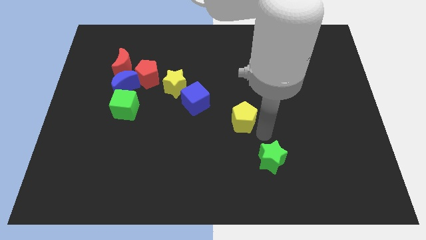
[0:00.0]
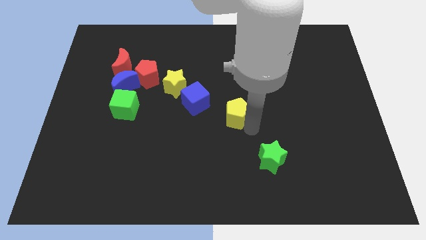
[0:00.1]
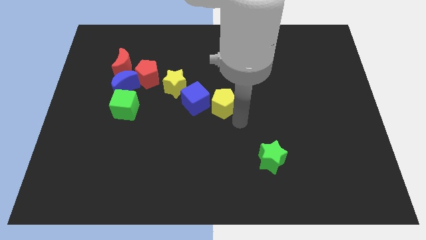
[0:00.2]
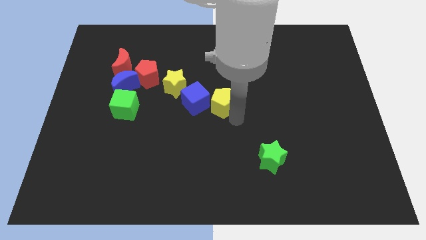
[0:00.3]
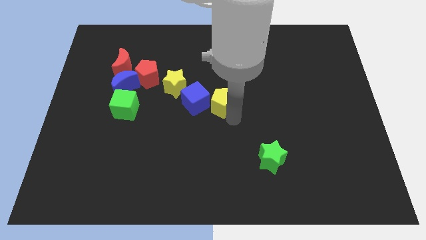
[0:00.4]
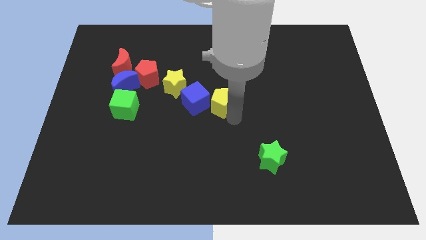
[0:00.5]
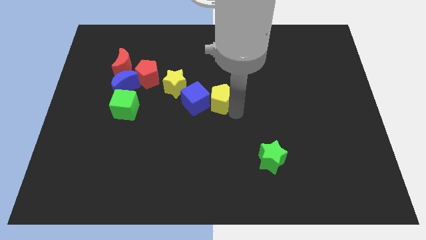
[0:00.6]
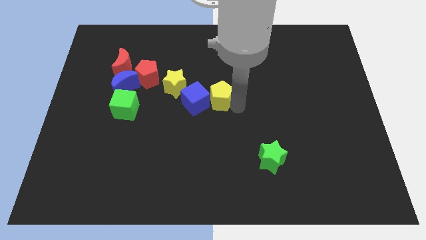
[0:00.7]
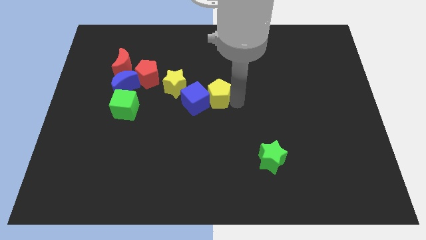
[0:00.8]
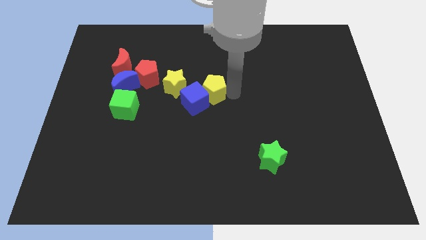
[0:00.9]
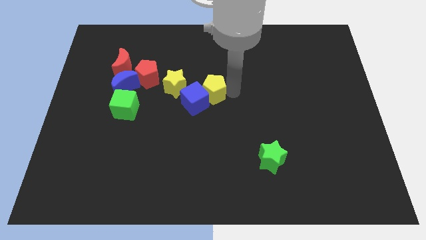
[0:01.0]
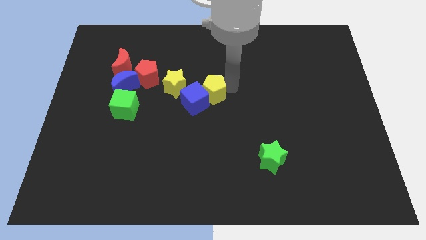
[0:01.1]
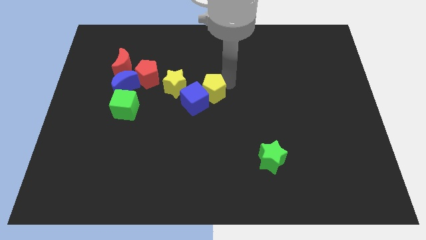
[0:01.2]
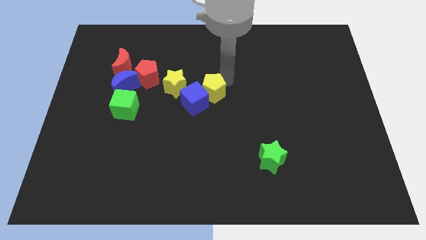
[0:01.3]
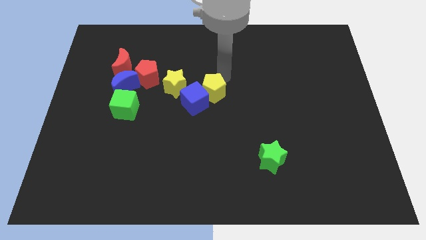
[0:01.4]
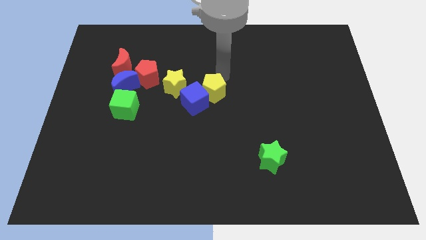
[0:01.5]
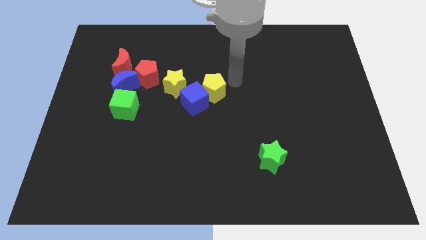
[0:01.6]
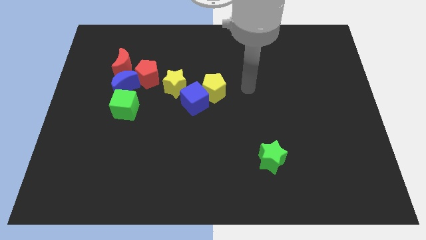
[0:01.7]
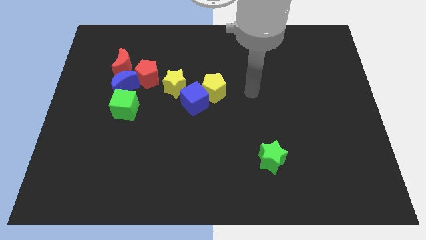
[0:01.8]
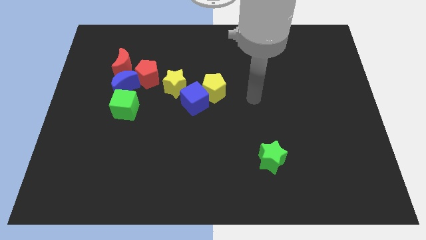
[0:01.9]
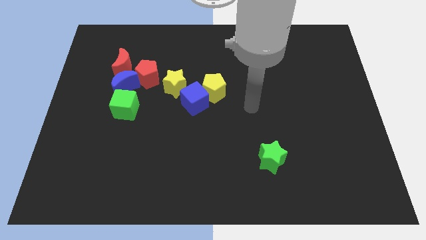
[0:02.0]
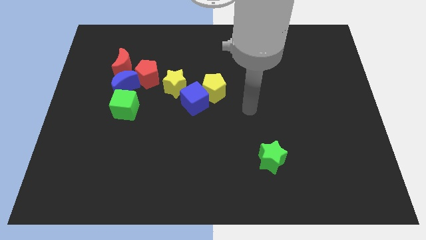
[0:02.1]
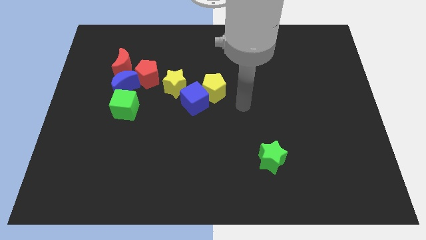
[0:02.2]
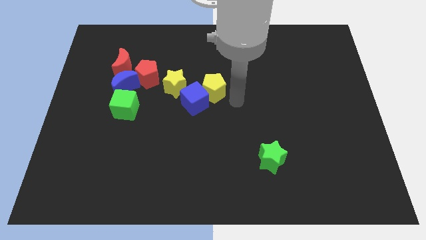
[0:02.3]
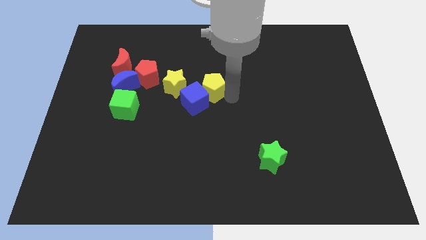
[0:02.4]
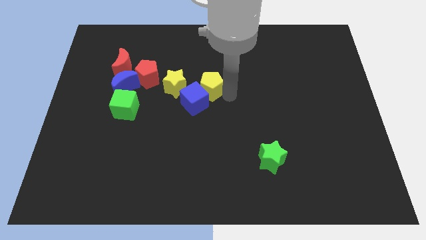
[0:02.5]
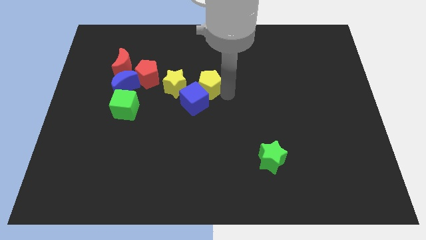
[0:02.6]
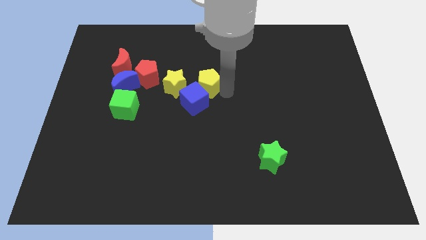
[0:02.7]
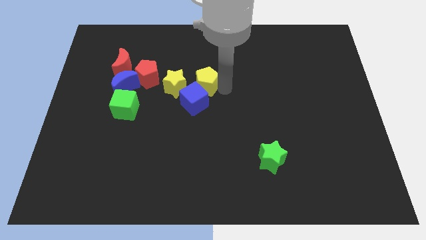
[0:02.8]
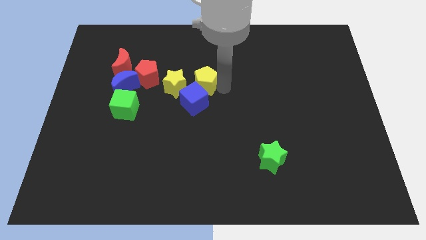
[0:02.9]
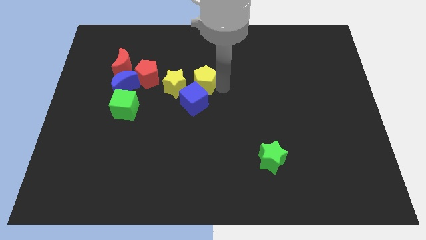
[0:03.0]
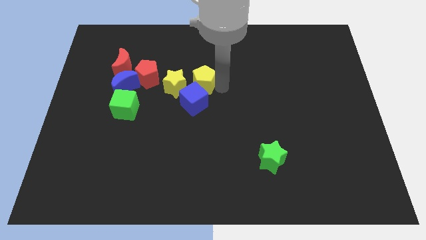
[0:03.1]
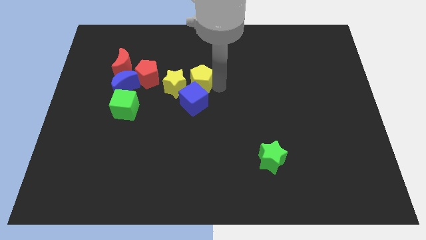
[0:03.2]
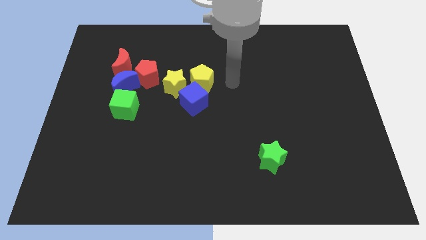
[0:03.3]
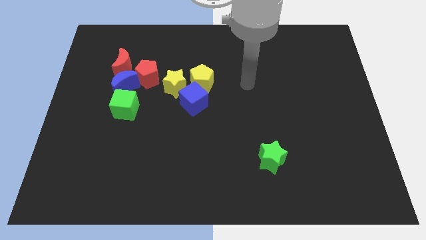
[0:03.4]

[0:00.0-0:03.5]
move the yellow pentagon and place it close to the blue cube

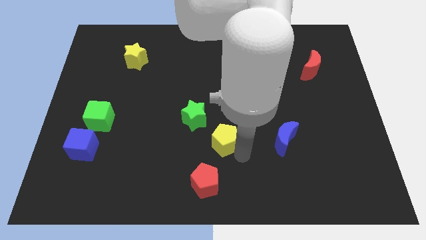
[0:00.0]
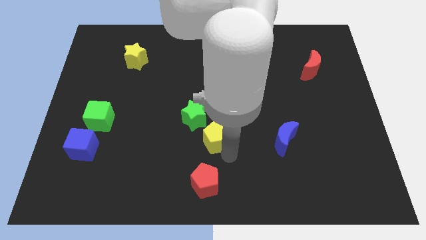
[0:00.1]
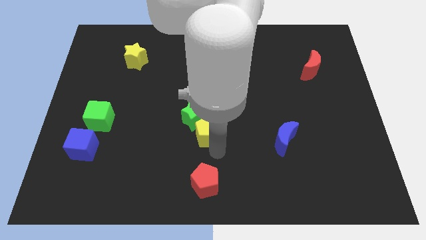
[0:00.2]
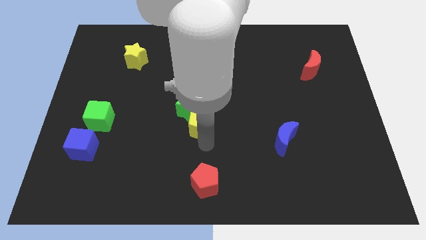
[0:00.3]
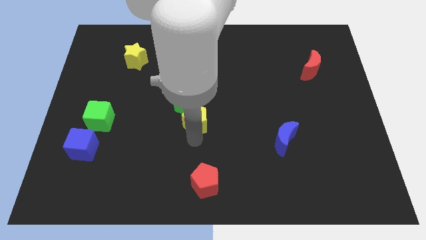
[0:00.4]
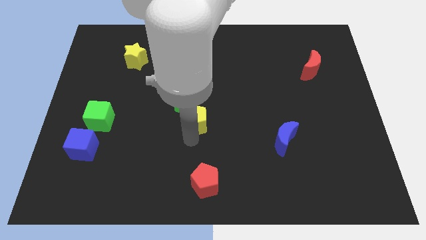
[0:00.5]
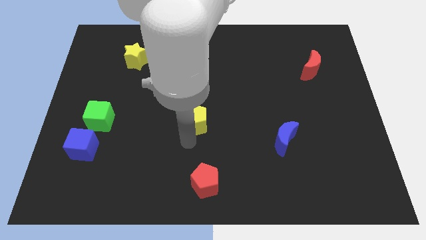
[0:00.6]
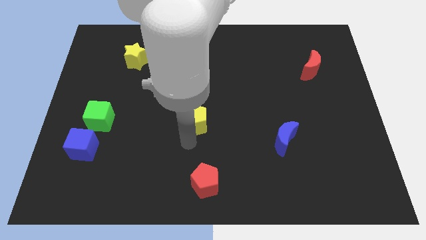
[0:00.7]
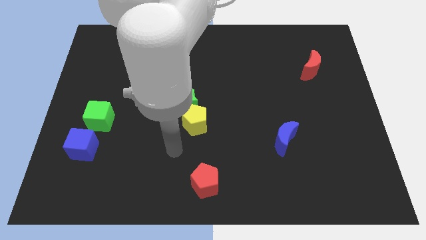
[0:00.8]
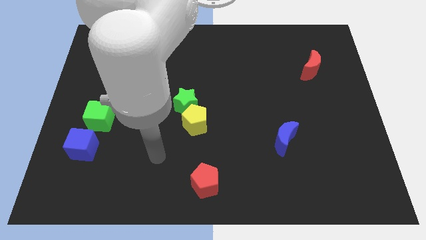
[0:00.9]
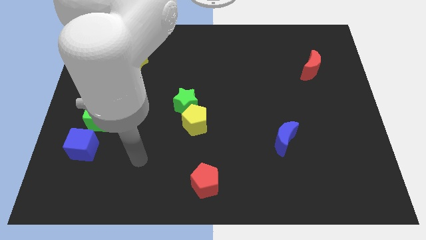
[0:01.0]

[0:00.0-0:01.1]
move yellow pentagon along with green star

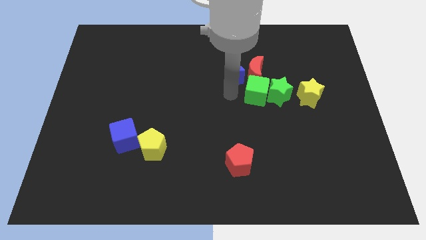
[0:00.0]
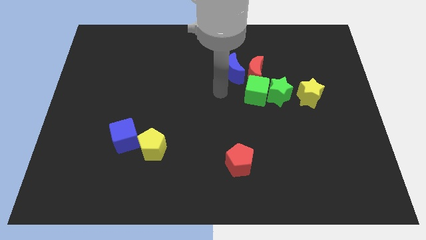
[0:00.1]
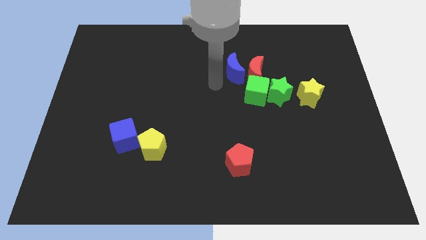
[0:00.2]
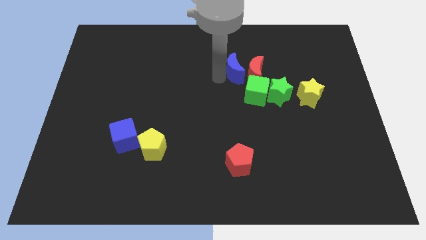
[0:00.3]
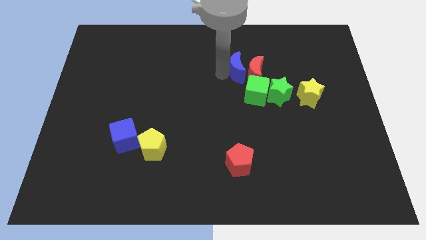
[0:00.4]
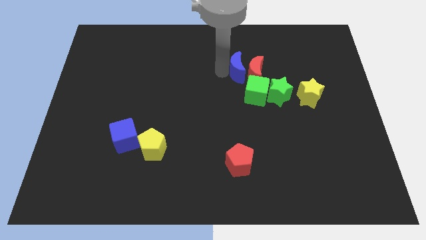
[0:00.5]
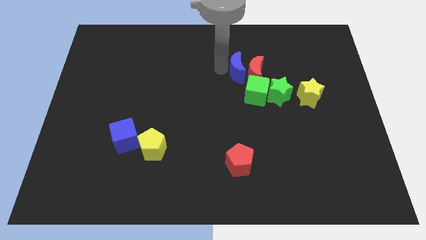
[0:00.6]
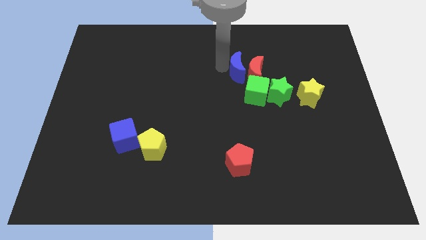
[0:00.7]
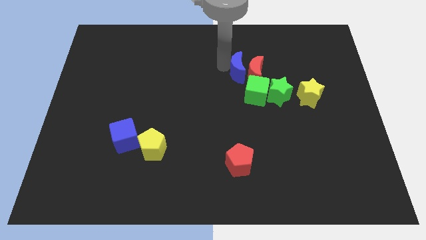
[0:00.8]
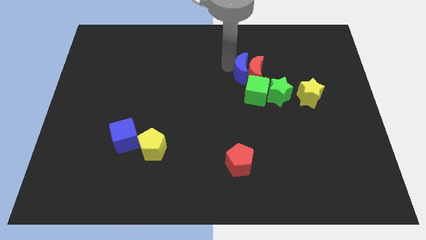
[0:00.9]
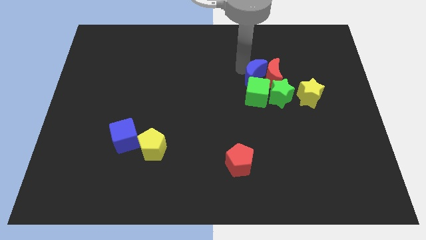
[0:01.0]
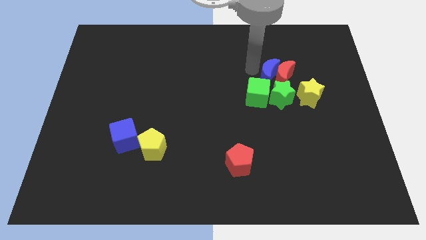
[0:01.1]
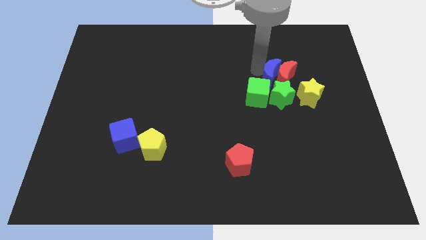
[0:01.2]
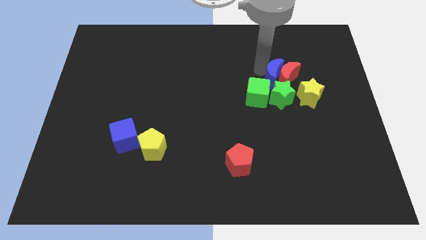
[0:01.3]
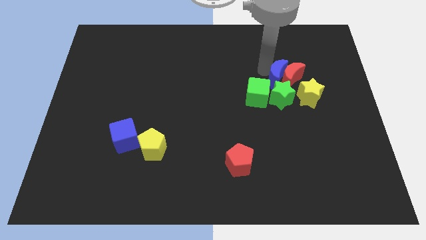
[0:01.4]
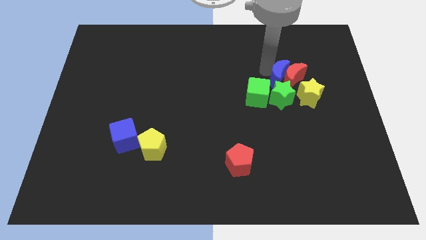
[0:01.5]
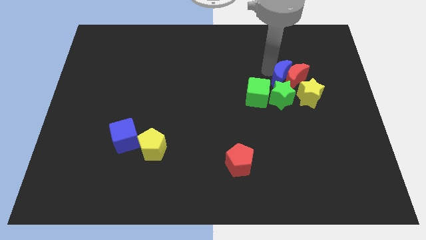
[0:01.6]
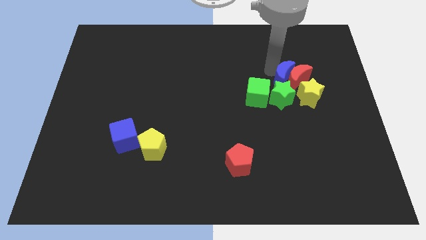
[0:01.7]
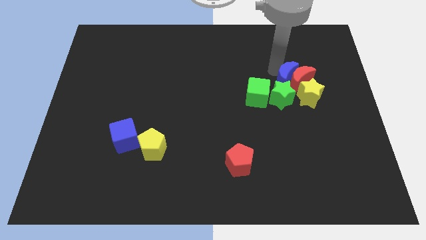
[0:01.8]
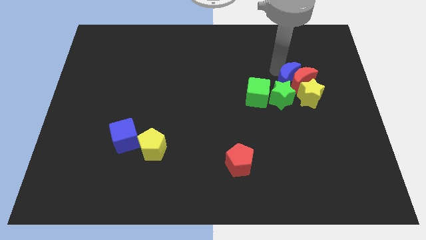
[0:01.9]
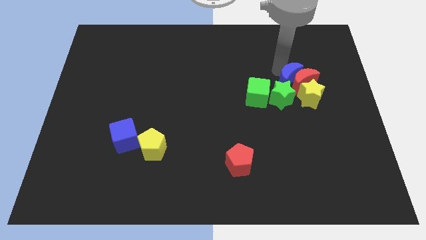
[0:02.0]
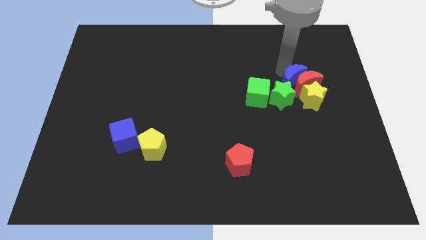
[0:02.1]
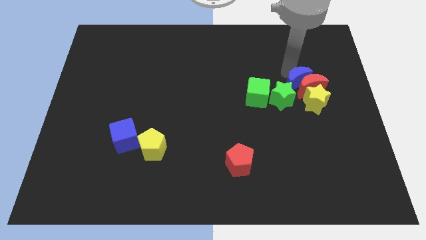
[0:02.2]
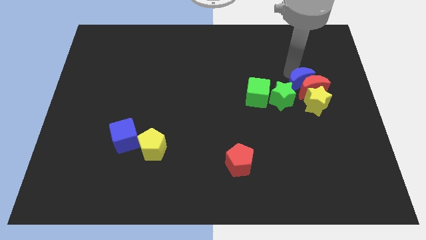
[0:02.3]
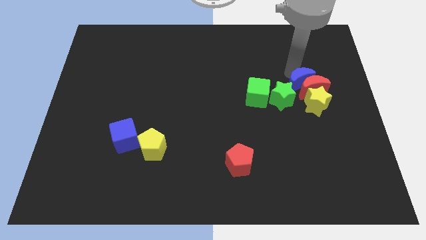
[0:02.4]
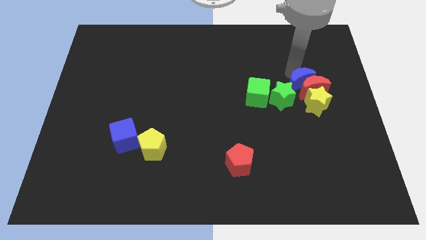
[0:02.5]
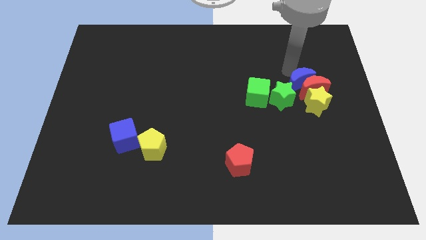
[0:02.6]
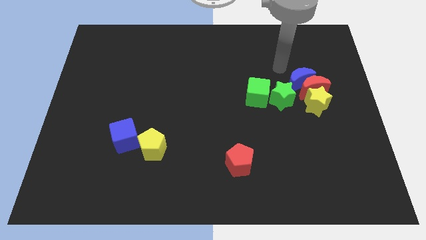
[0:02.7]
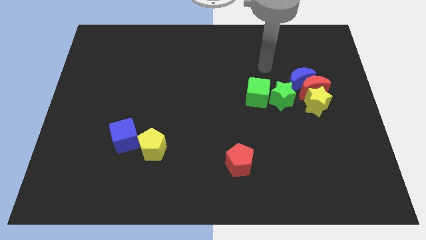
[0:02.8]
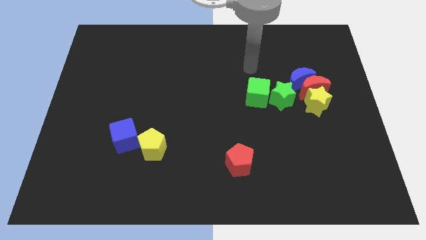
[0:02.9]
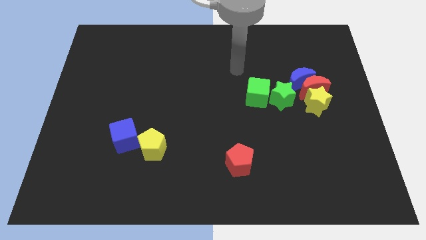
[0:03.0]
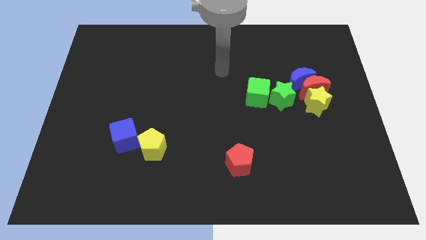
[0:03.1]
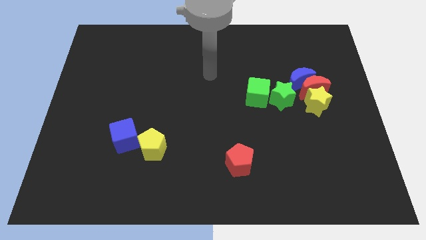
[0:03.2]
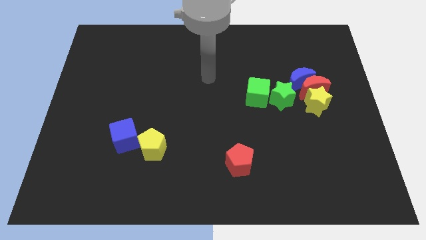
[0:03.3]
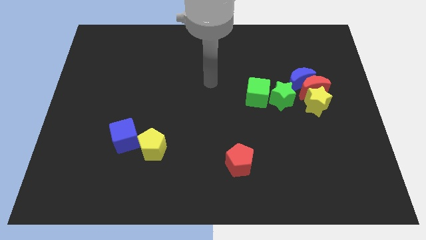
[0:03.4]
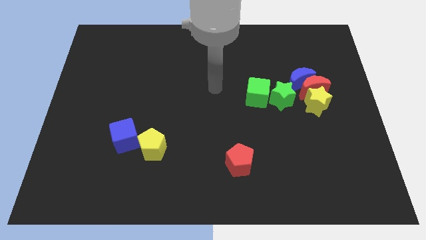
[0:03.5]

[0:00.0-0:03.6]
push the blue moon along with the red moon into the yellow star

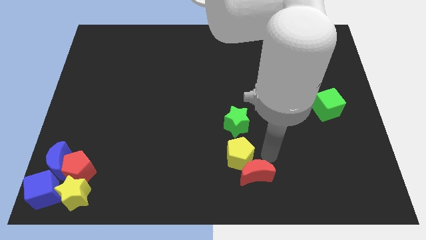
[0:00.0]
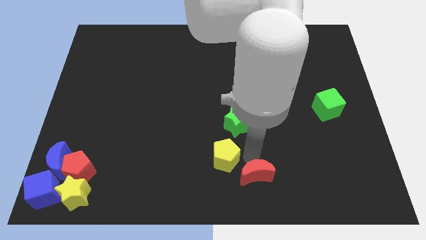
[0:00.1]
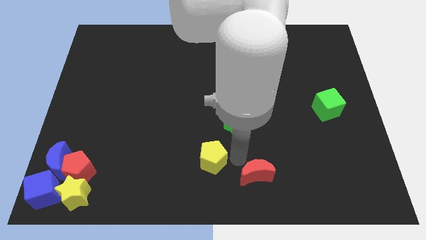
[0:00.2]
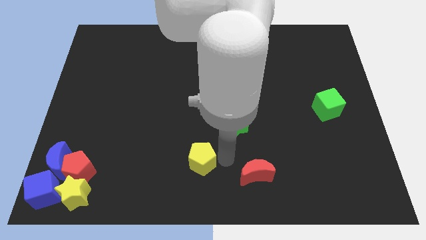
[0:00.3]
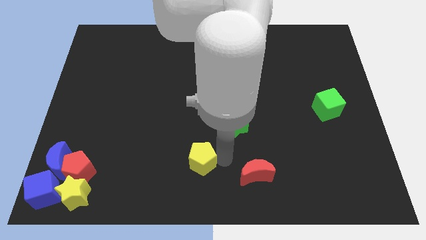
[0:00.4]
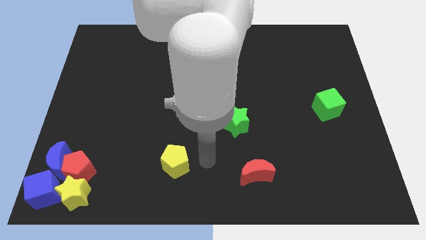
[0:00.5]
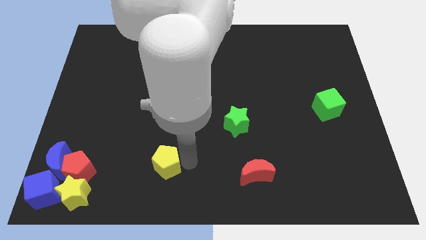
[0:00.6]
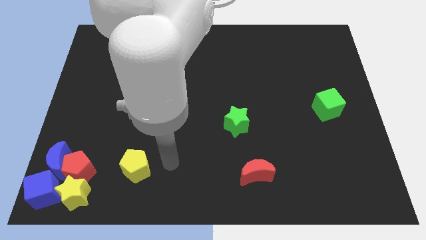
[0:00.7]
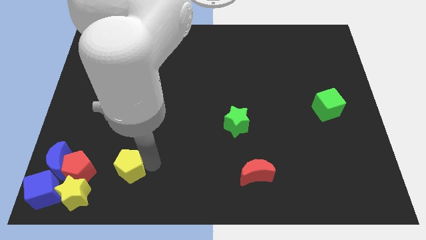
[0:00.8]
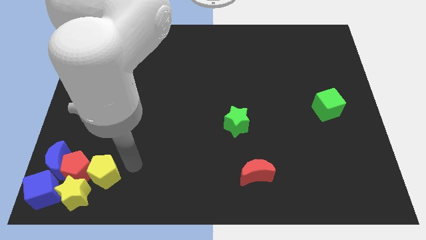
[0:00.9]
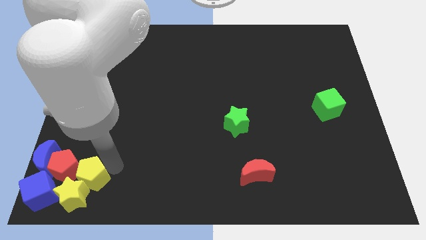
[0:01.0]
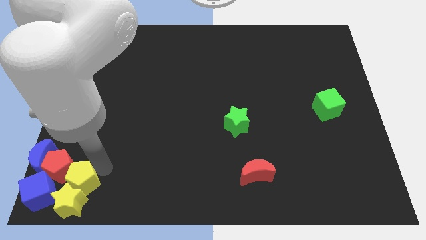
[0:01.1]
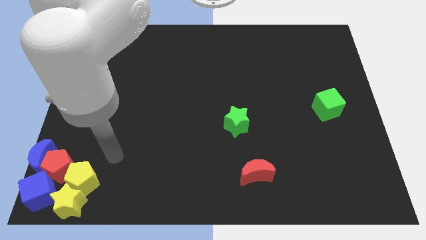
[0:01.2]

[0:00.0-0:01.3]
move the yellow pentagon into the top of the yellow star
